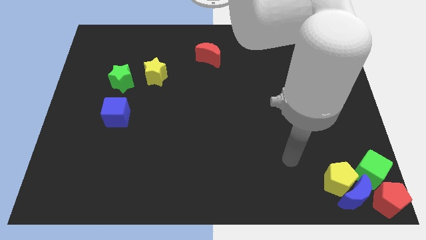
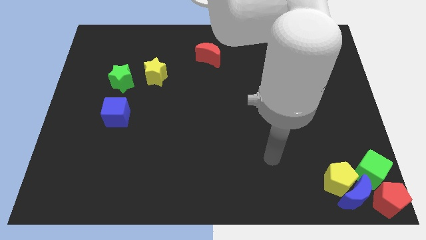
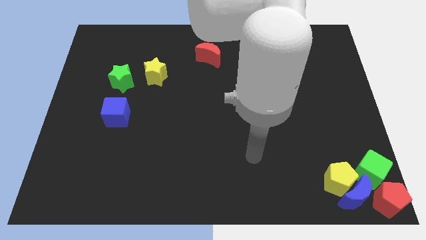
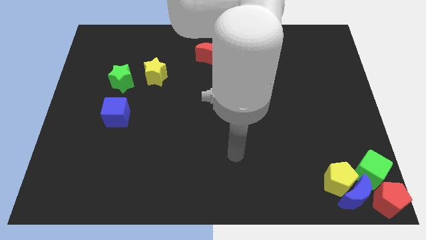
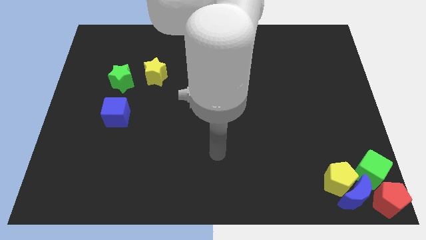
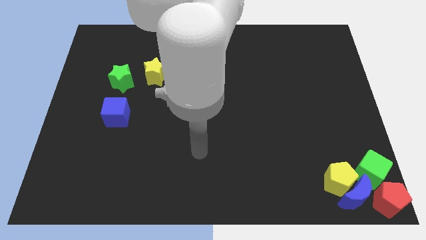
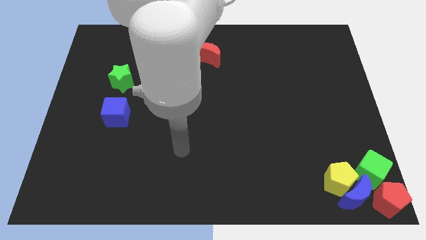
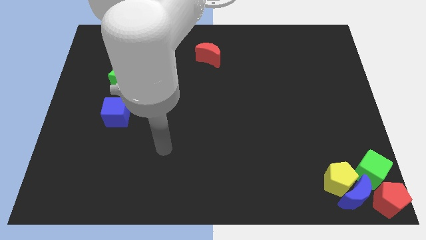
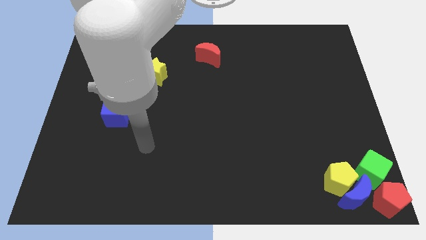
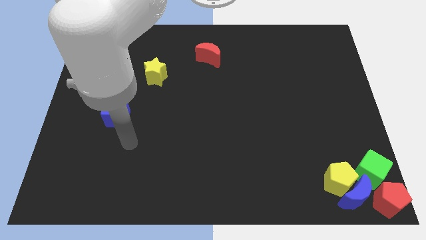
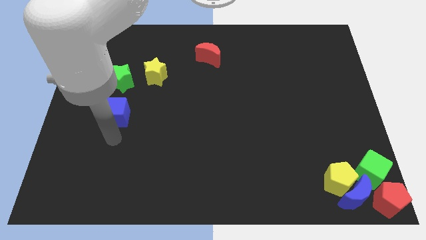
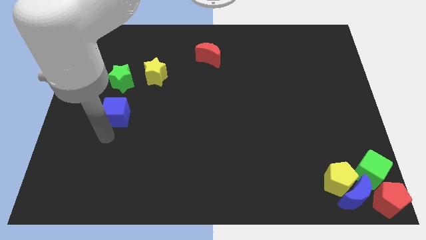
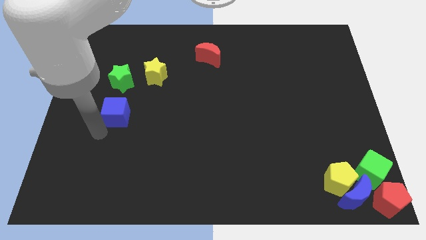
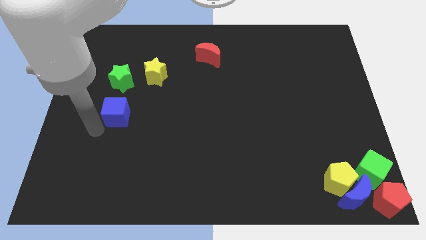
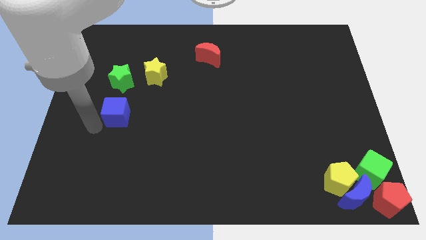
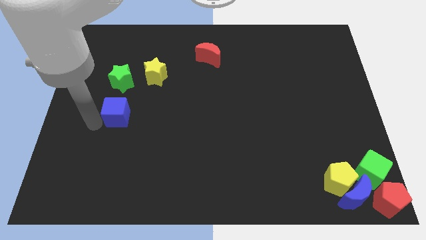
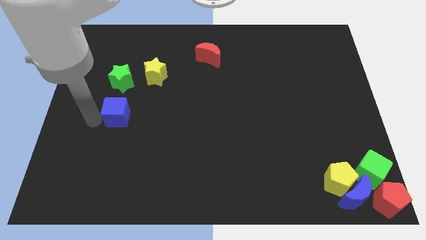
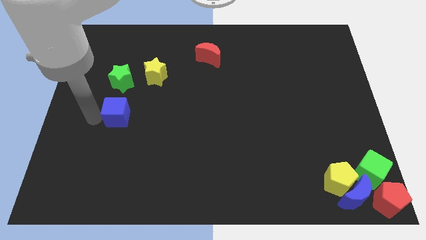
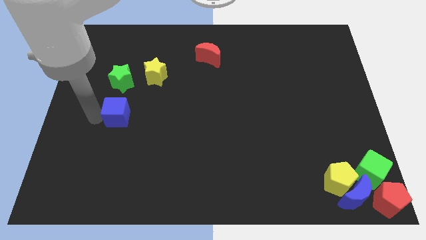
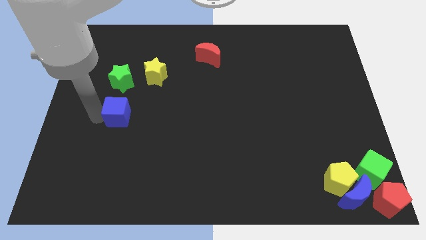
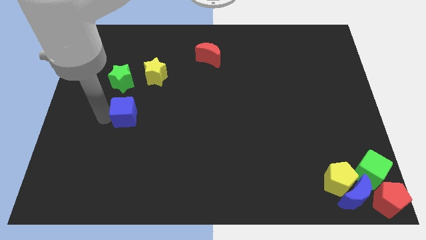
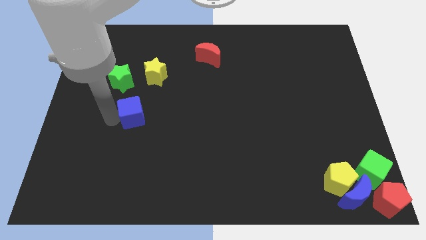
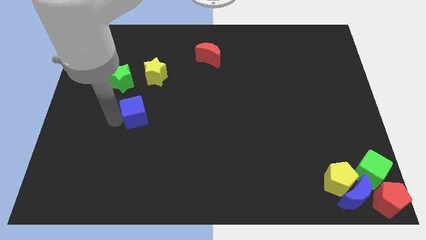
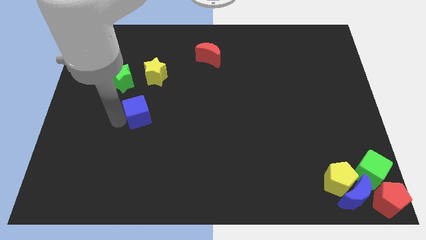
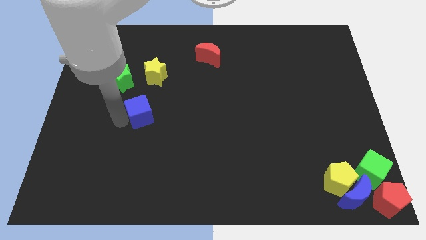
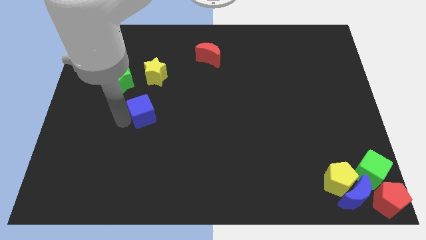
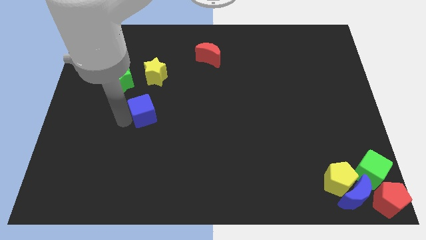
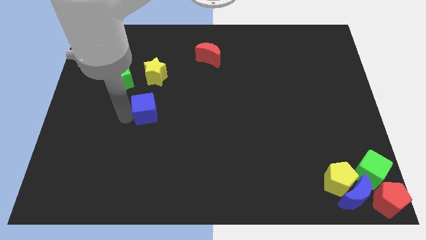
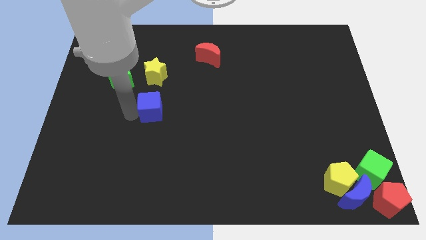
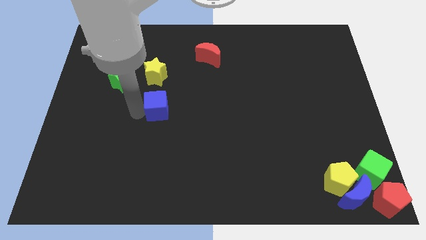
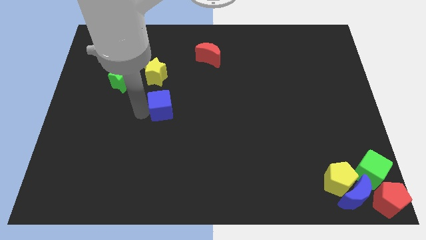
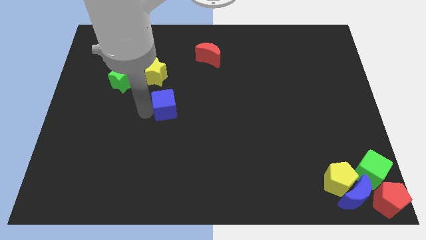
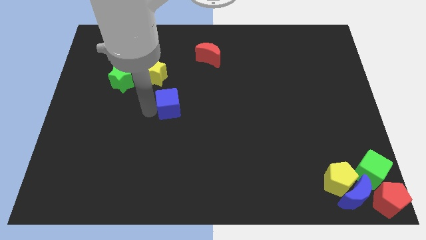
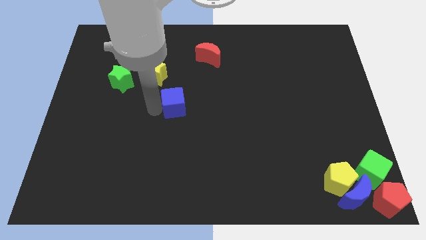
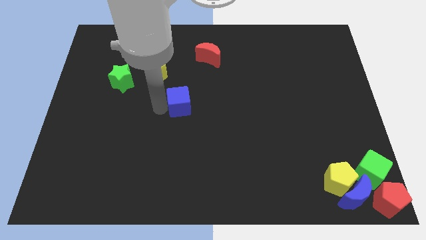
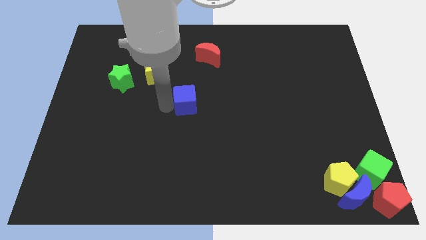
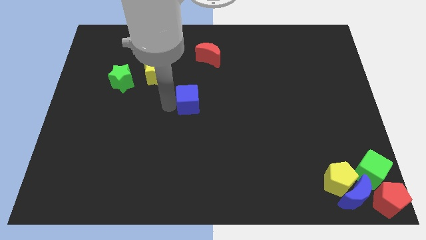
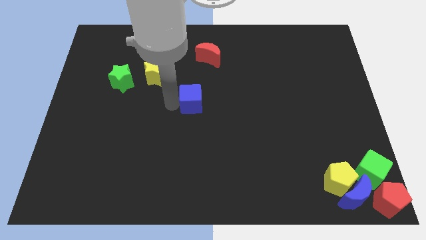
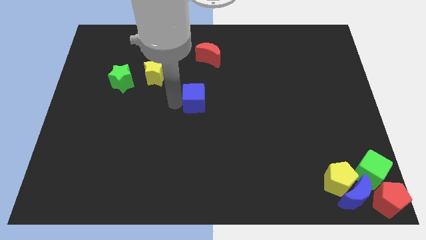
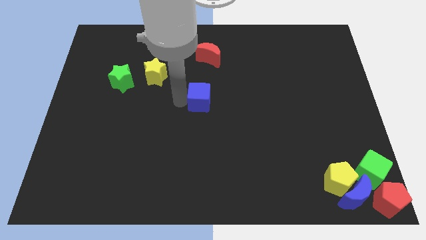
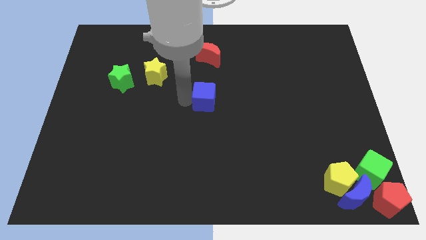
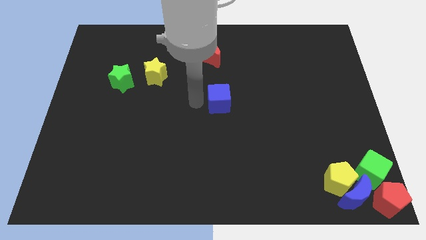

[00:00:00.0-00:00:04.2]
move the blue cube towards the center of the board

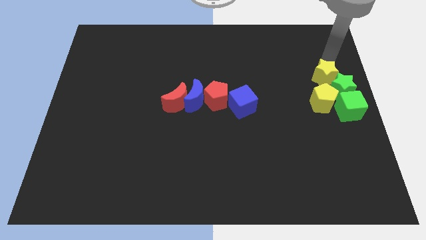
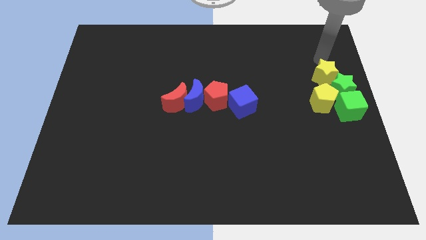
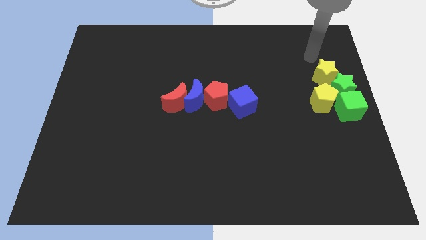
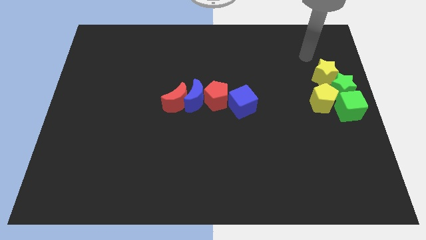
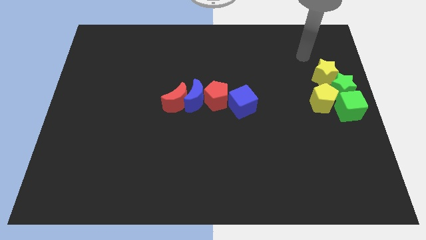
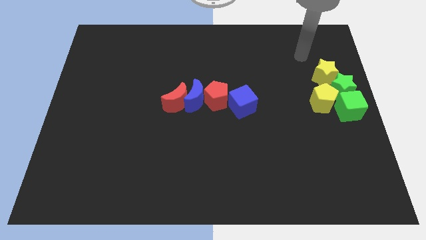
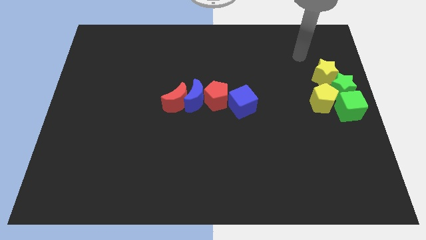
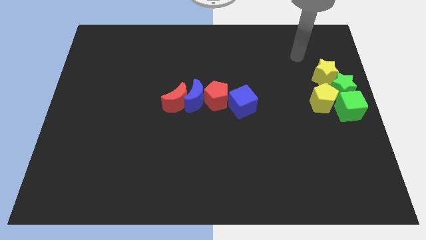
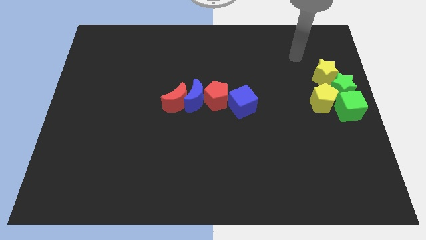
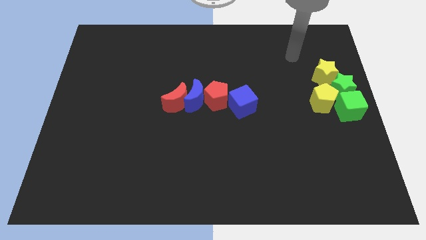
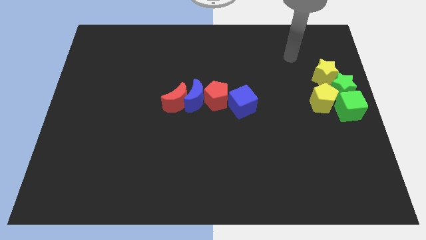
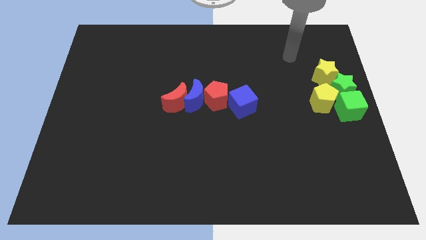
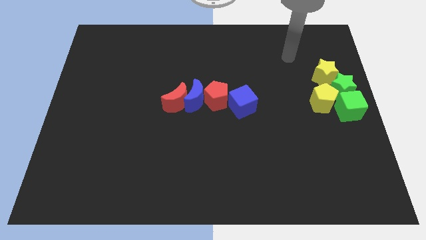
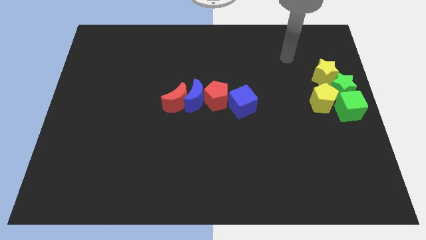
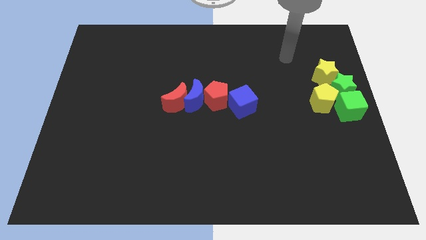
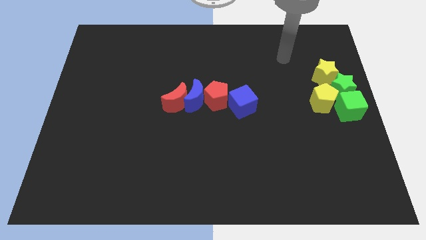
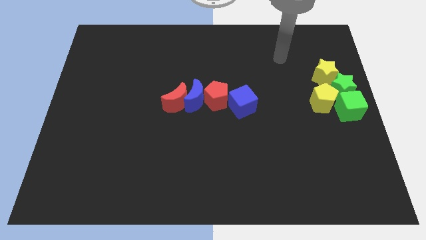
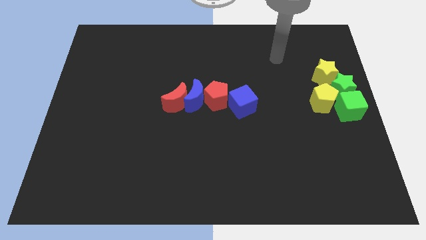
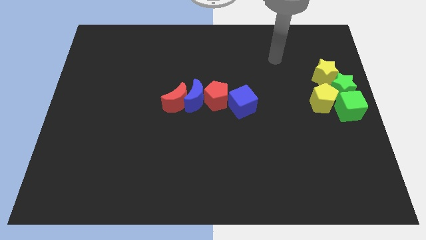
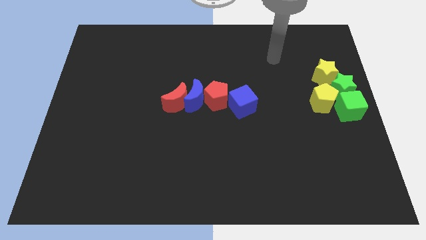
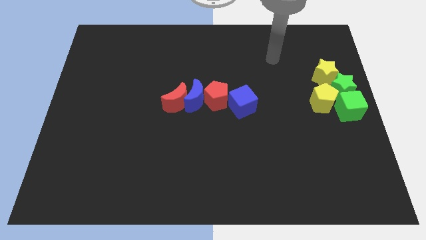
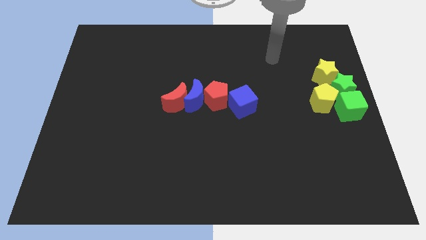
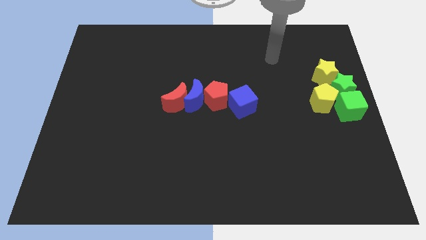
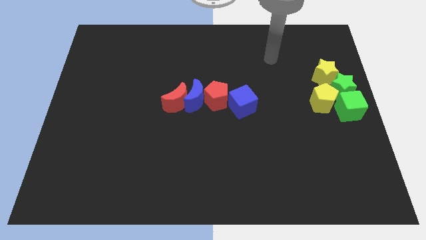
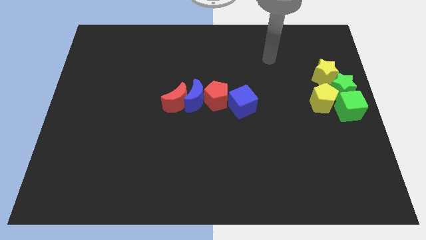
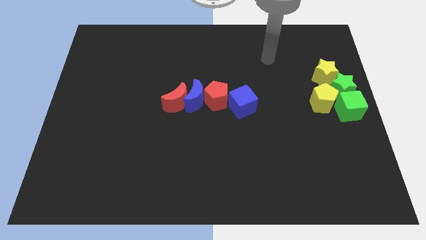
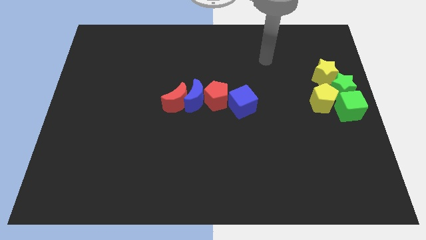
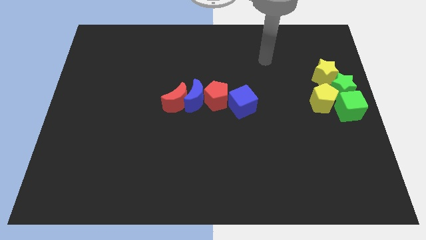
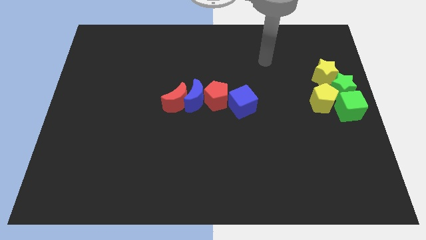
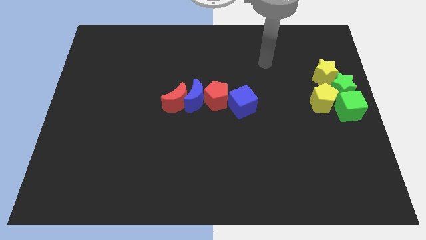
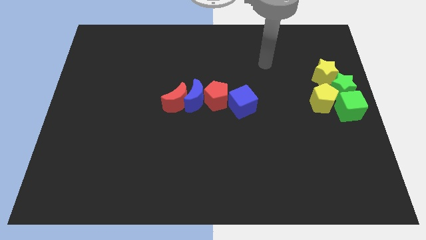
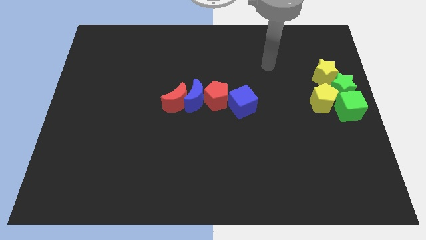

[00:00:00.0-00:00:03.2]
go away from the group of blocks towards left

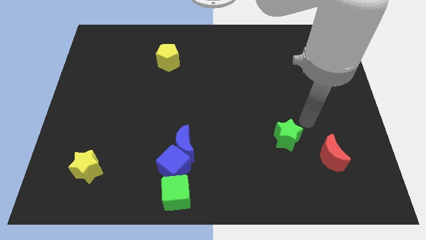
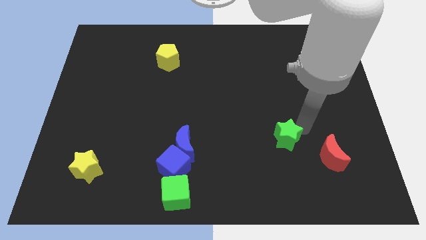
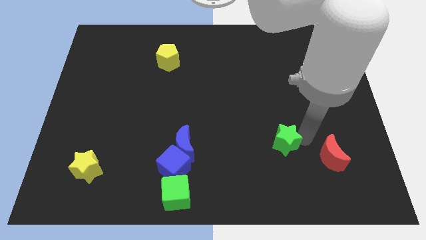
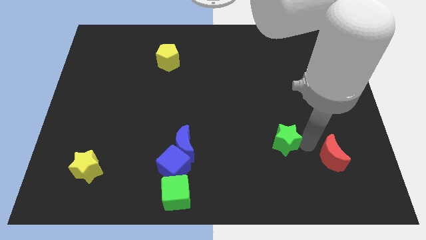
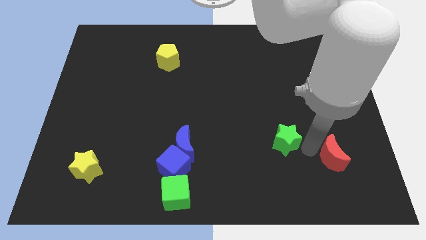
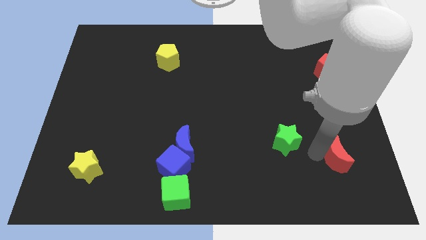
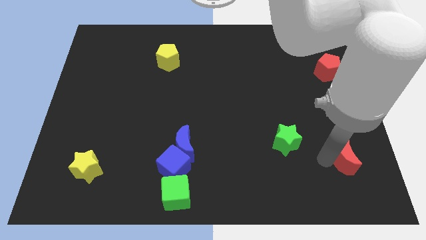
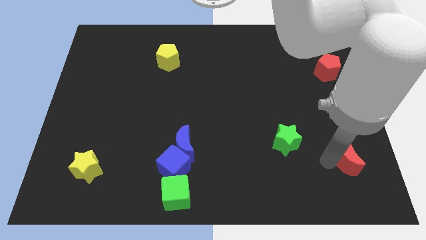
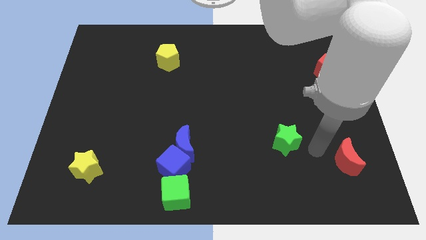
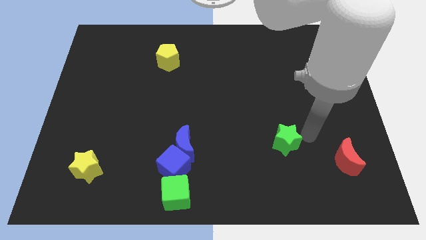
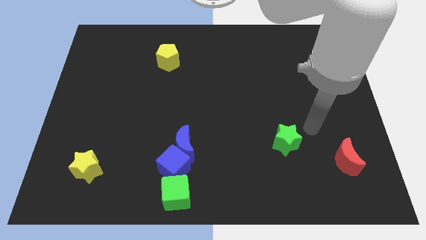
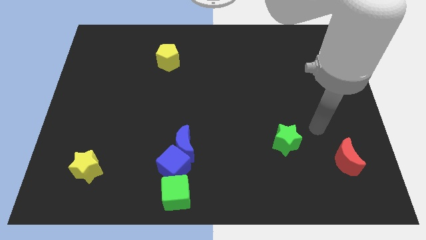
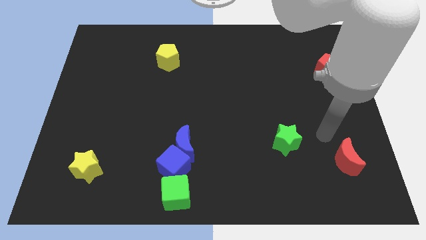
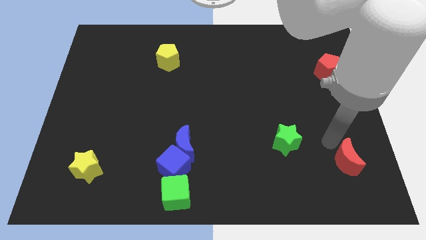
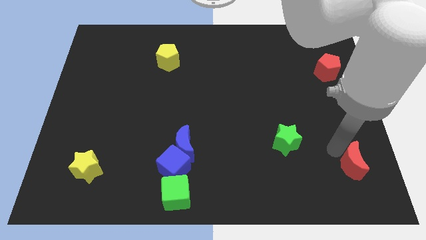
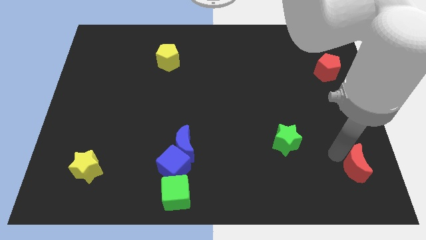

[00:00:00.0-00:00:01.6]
move the red moon slightly to the bottom side
